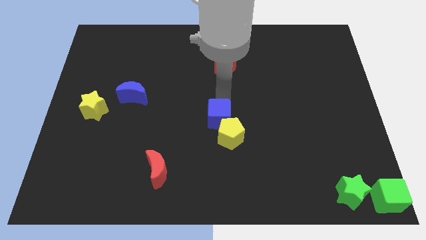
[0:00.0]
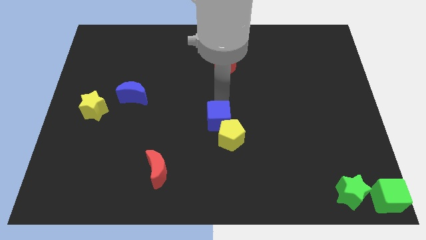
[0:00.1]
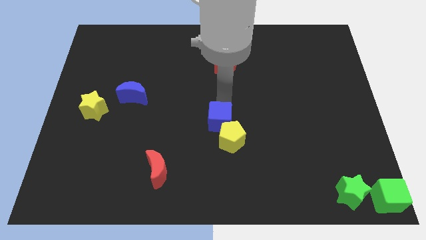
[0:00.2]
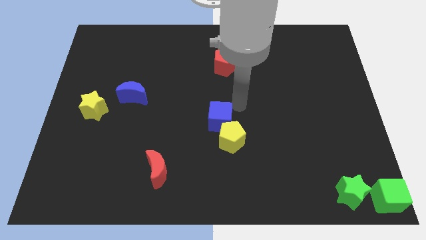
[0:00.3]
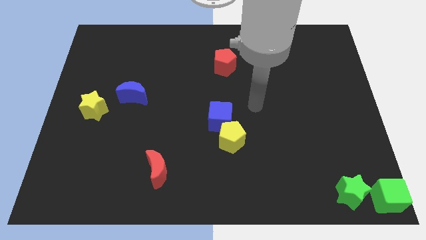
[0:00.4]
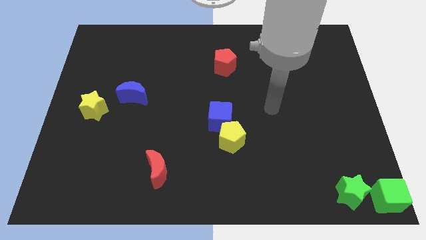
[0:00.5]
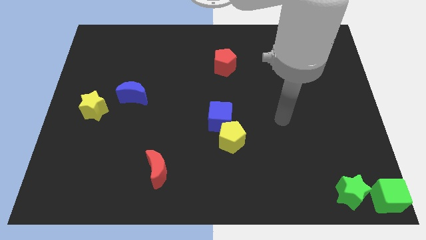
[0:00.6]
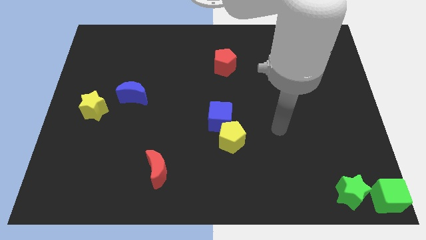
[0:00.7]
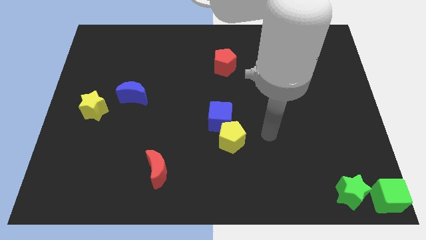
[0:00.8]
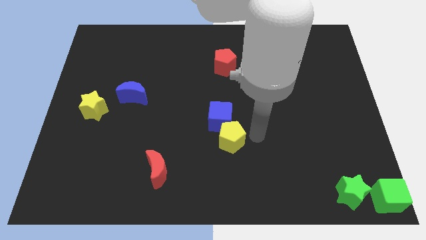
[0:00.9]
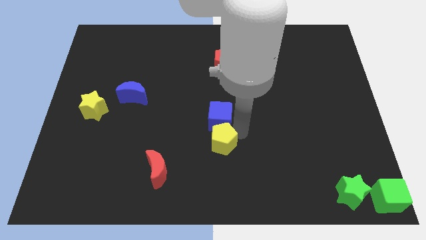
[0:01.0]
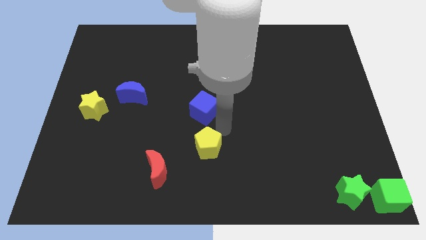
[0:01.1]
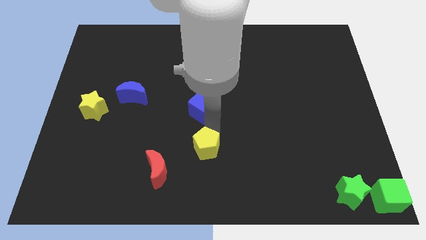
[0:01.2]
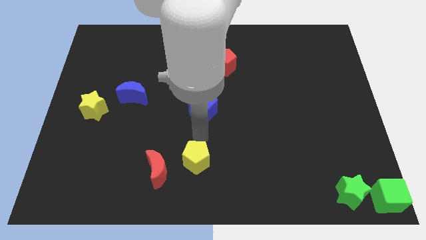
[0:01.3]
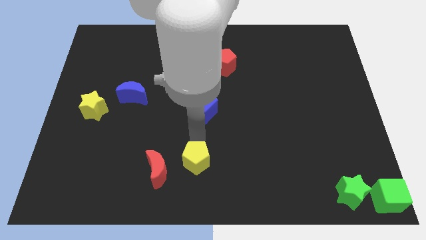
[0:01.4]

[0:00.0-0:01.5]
separate the blue cube and the yellow pentagon

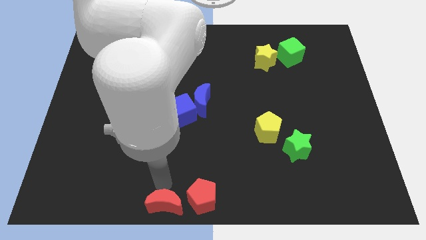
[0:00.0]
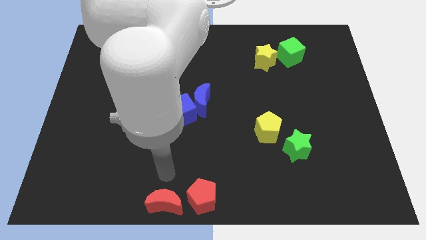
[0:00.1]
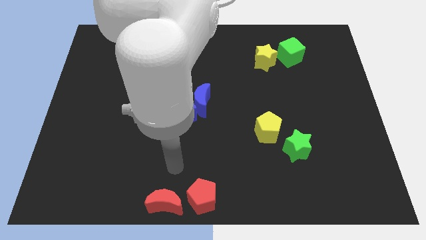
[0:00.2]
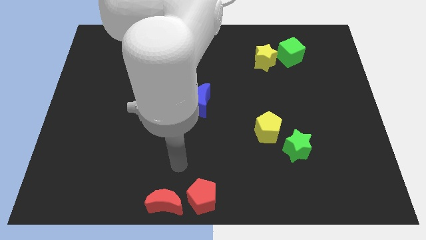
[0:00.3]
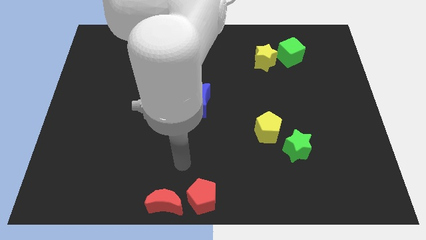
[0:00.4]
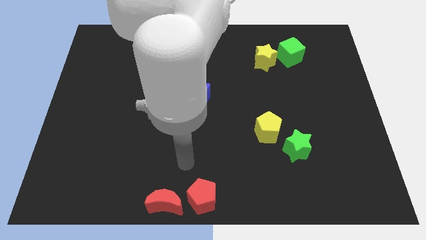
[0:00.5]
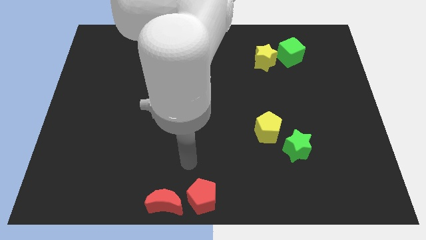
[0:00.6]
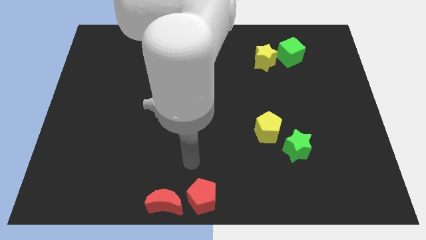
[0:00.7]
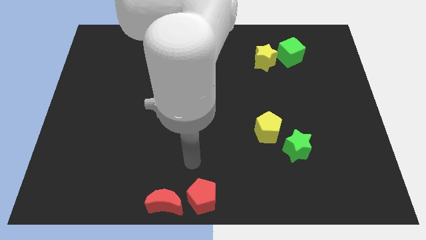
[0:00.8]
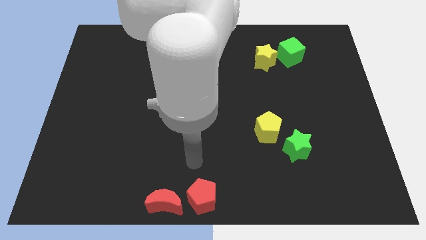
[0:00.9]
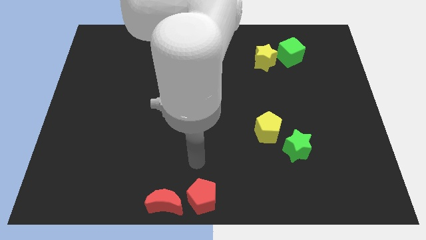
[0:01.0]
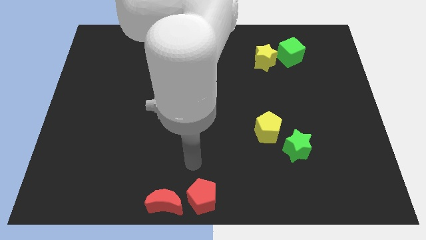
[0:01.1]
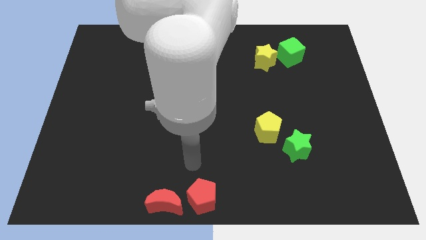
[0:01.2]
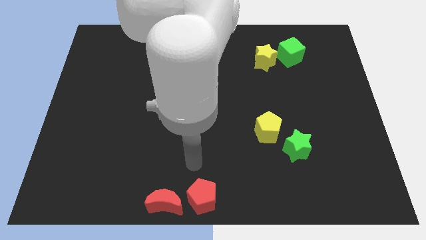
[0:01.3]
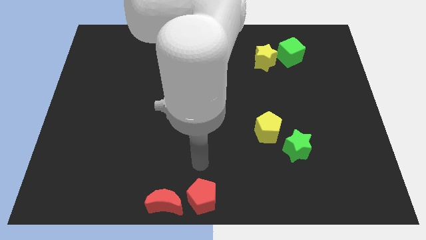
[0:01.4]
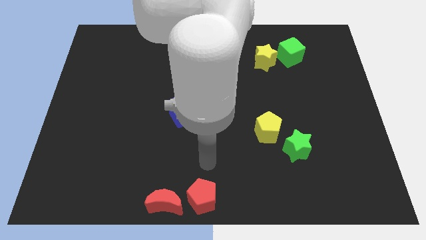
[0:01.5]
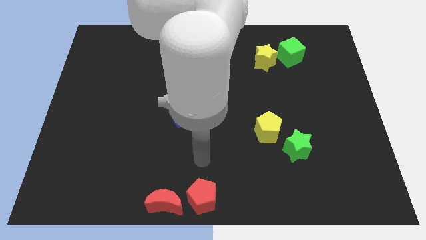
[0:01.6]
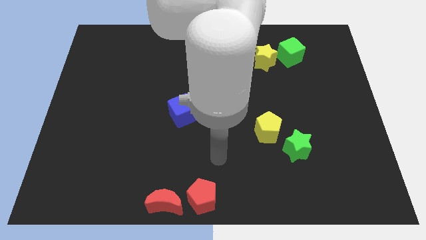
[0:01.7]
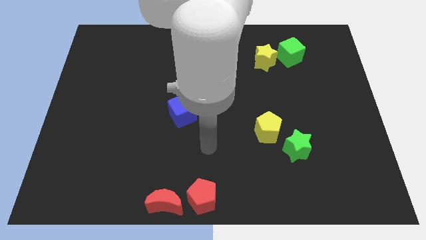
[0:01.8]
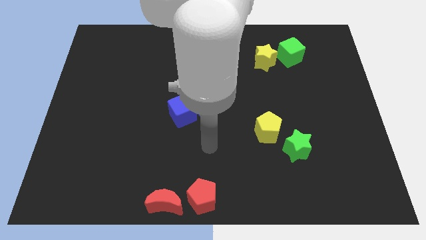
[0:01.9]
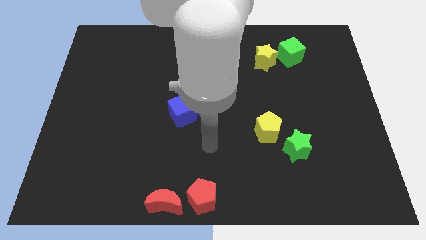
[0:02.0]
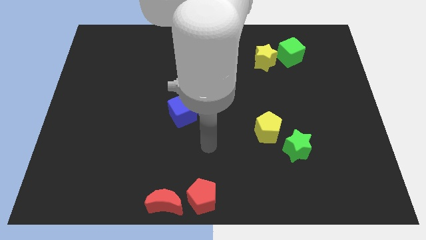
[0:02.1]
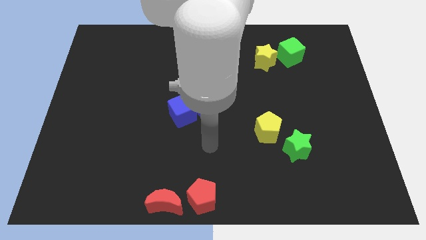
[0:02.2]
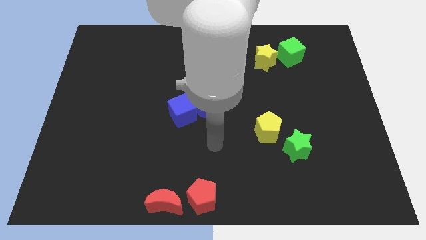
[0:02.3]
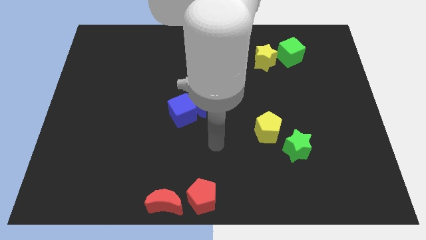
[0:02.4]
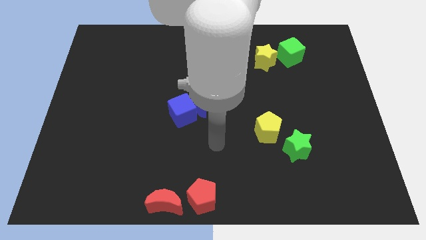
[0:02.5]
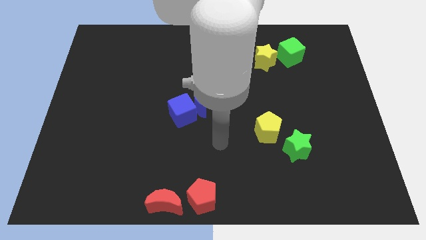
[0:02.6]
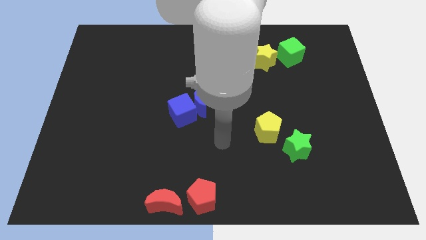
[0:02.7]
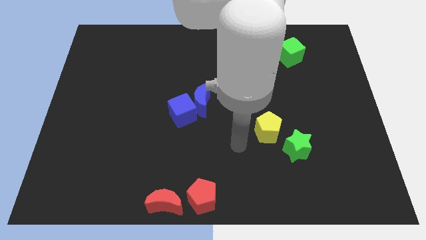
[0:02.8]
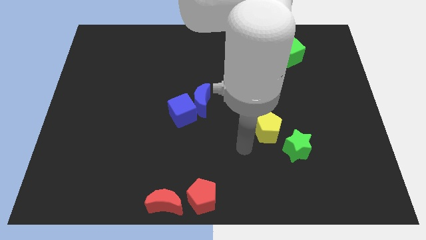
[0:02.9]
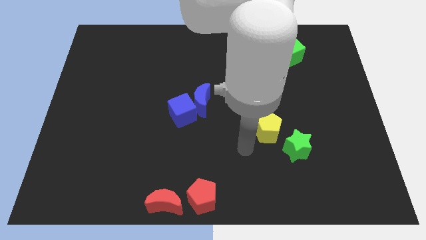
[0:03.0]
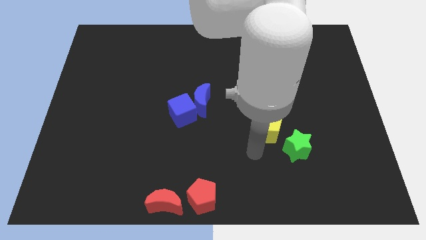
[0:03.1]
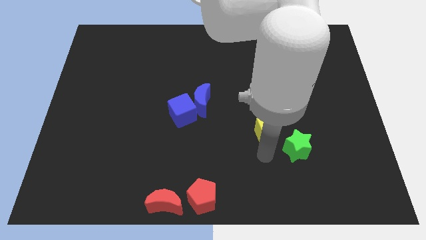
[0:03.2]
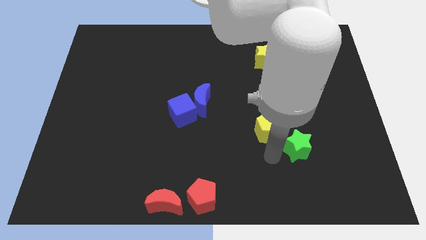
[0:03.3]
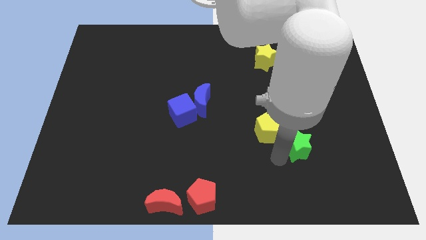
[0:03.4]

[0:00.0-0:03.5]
move your arm to the left of the green star

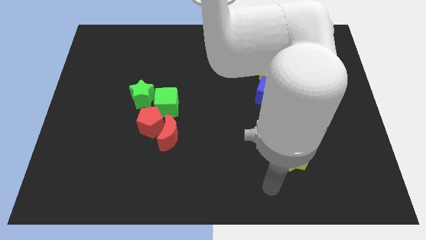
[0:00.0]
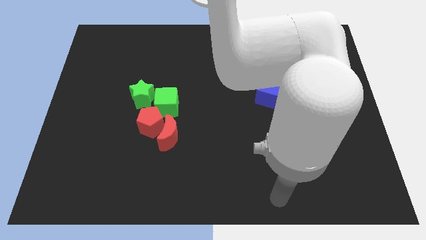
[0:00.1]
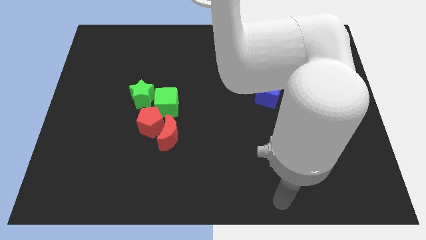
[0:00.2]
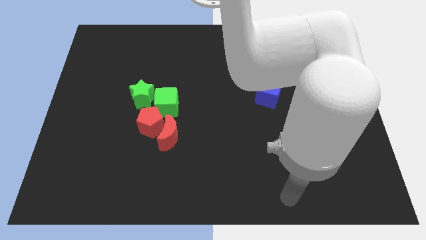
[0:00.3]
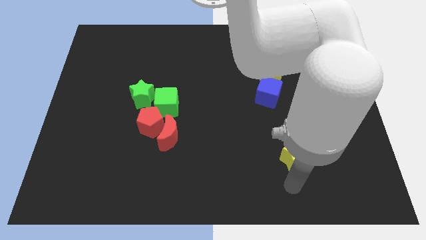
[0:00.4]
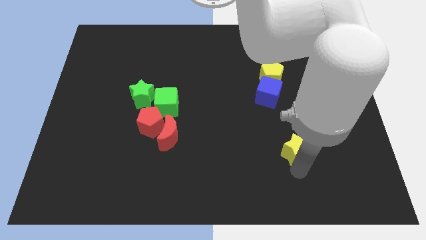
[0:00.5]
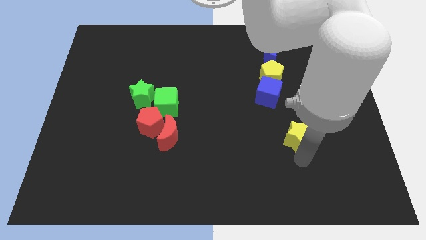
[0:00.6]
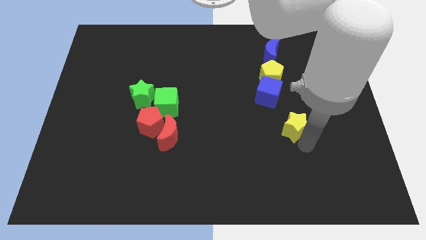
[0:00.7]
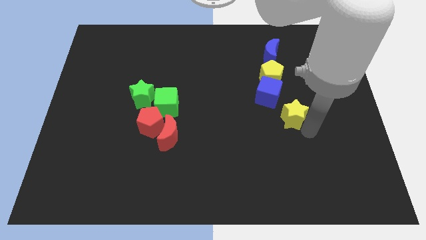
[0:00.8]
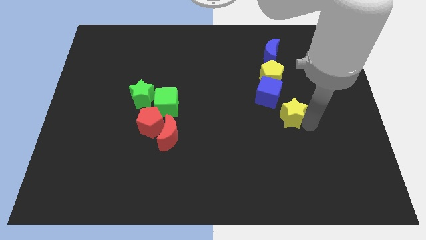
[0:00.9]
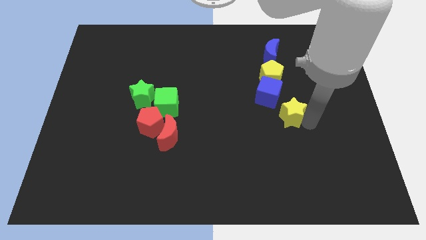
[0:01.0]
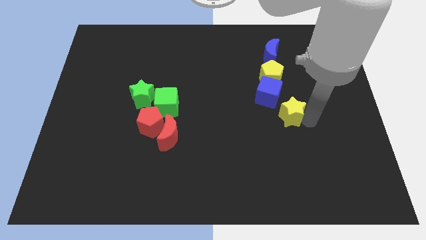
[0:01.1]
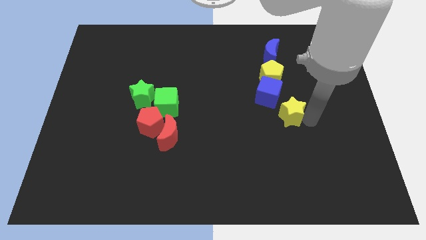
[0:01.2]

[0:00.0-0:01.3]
push yellow star towards blue cube

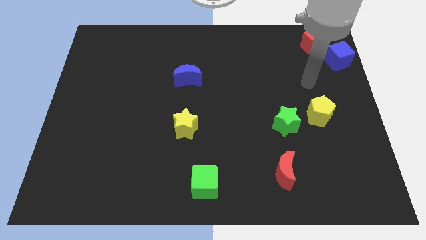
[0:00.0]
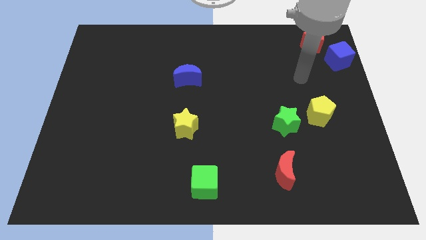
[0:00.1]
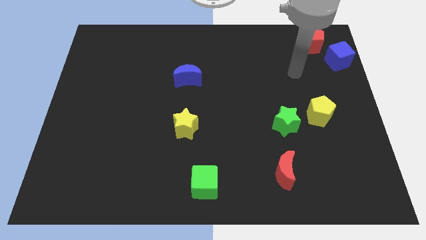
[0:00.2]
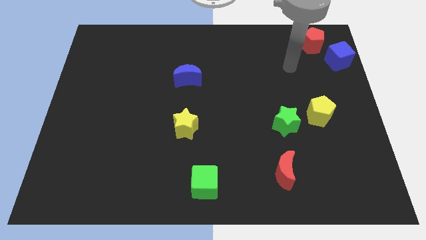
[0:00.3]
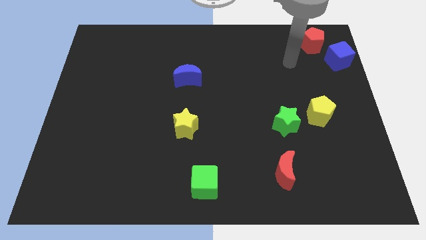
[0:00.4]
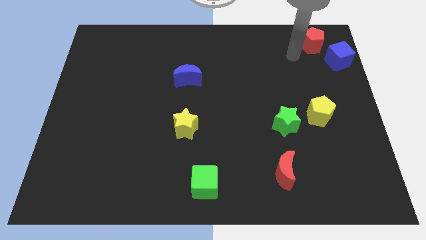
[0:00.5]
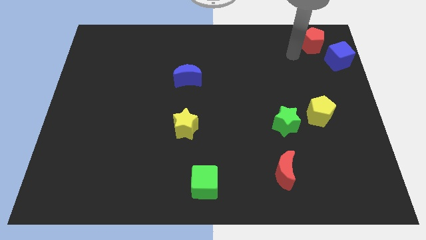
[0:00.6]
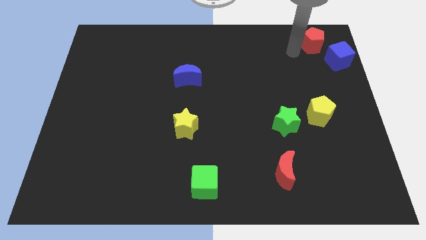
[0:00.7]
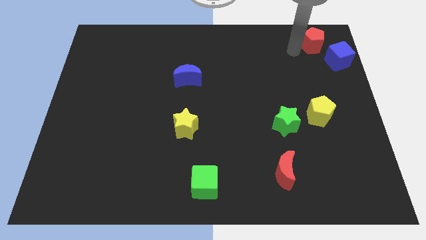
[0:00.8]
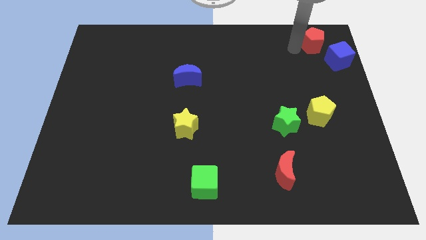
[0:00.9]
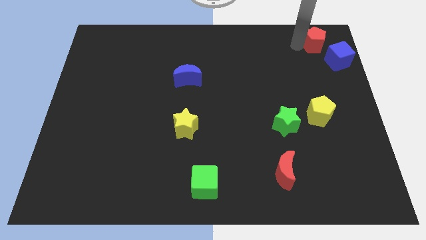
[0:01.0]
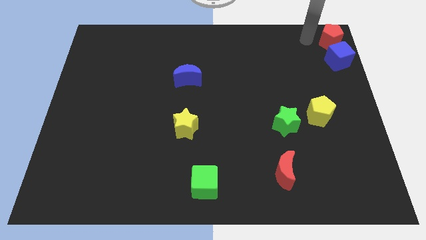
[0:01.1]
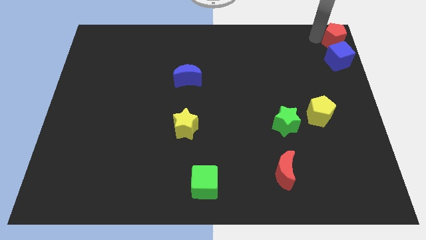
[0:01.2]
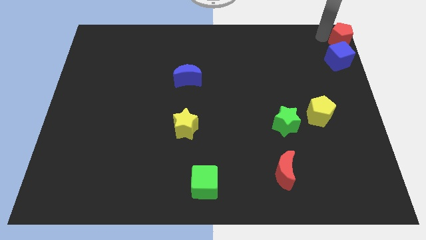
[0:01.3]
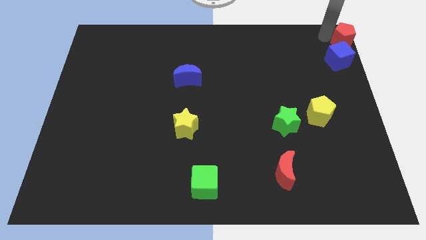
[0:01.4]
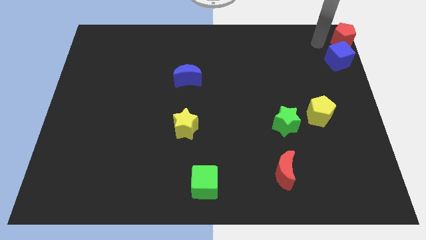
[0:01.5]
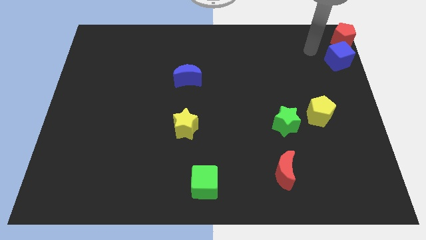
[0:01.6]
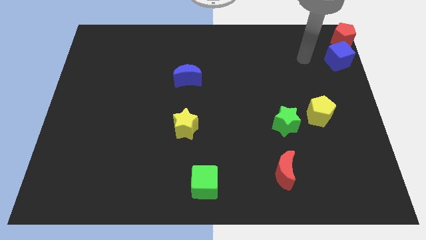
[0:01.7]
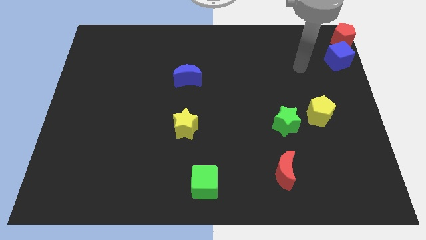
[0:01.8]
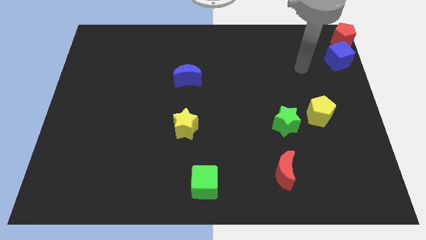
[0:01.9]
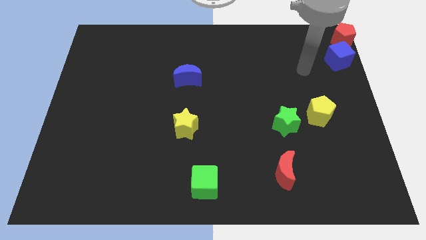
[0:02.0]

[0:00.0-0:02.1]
move red pentagon close to blue cube

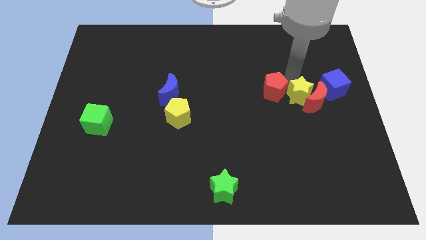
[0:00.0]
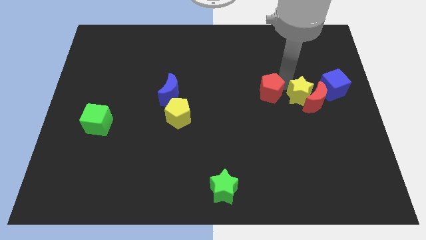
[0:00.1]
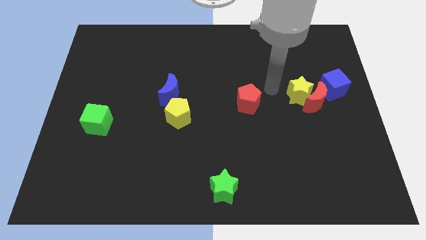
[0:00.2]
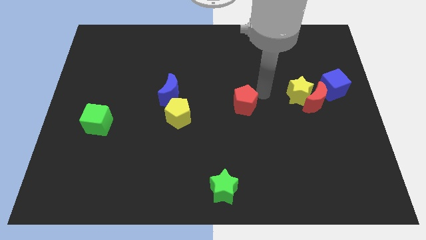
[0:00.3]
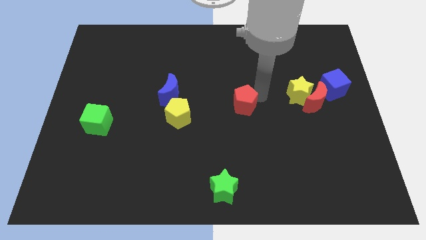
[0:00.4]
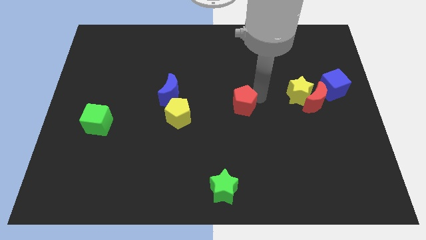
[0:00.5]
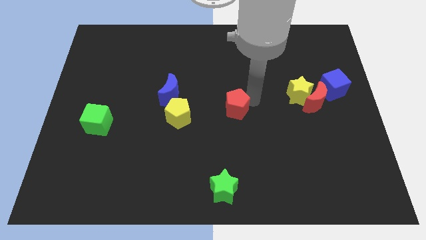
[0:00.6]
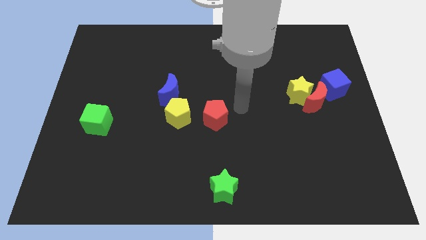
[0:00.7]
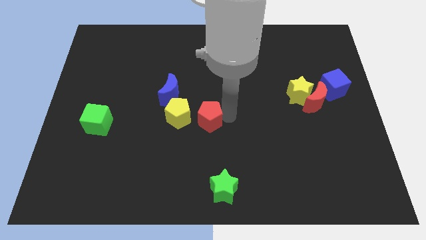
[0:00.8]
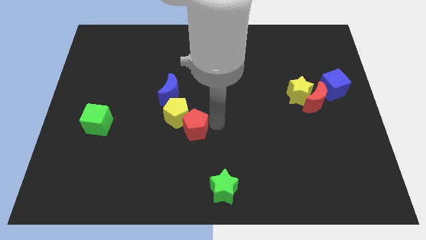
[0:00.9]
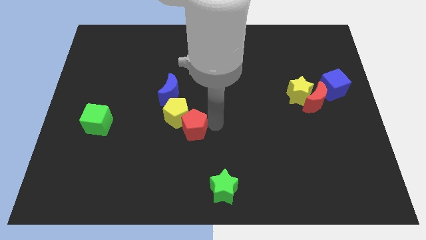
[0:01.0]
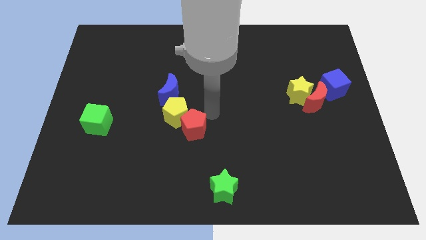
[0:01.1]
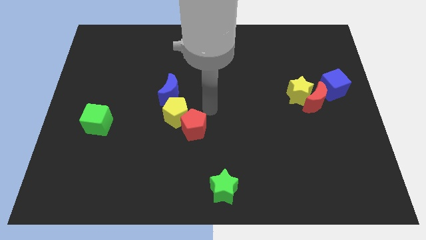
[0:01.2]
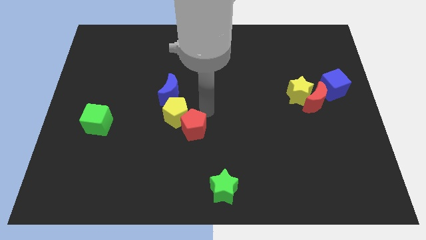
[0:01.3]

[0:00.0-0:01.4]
move the red pentagon into the yellow pentagon
